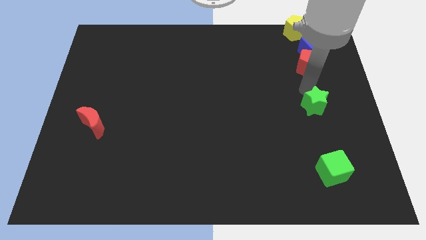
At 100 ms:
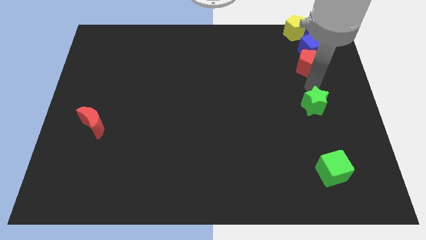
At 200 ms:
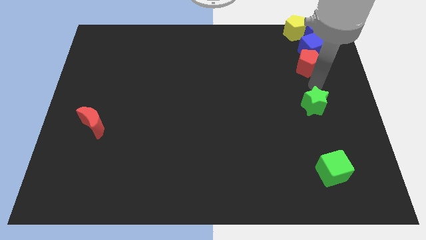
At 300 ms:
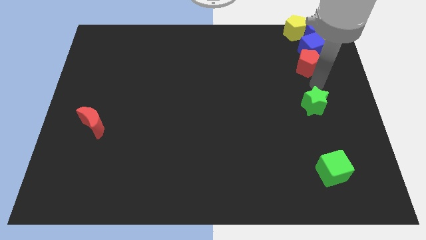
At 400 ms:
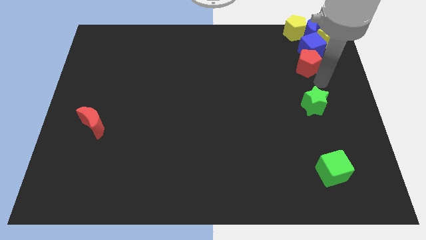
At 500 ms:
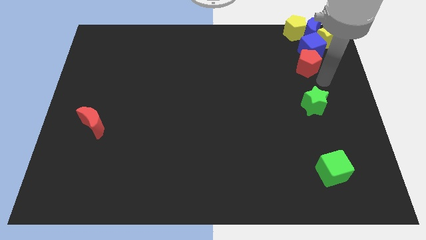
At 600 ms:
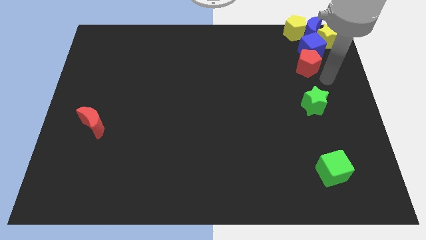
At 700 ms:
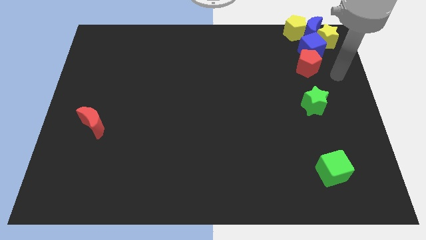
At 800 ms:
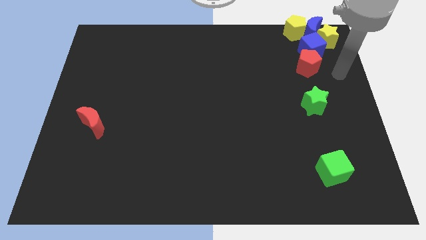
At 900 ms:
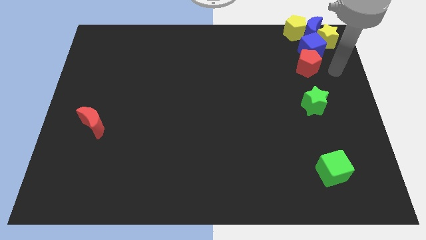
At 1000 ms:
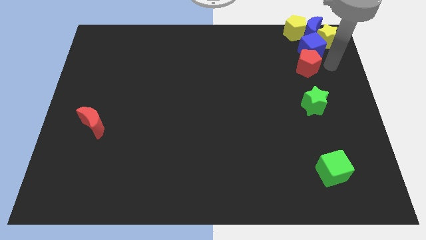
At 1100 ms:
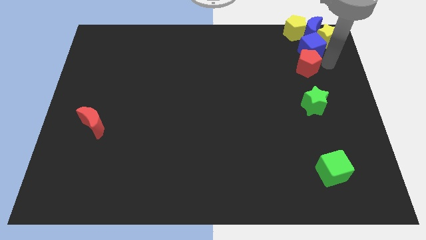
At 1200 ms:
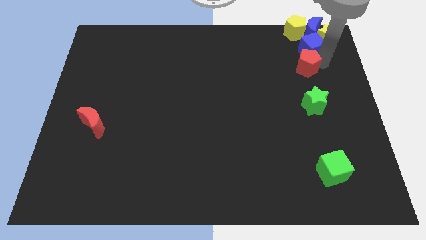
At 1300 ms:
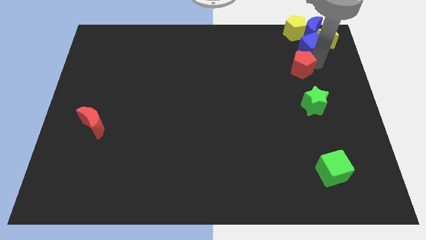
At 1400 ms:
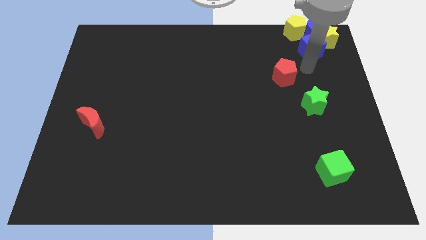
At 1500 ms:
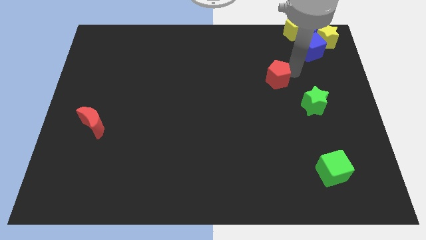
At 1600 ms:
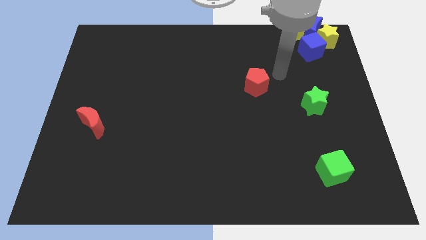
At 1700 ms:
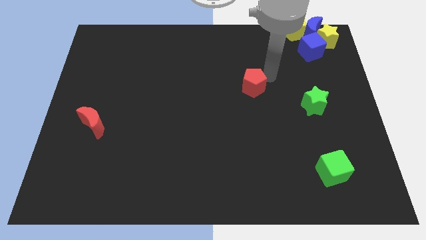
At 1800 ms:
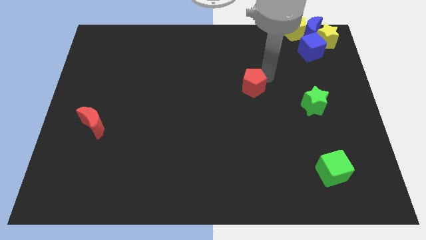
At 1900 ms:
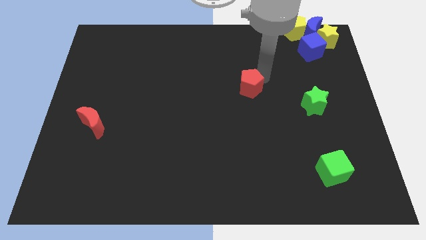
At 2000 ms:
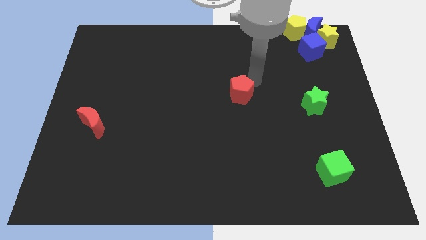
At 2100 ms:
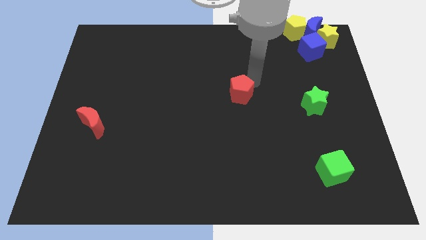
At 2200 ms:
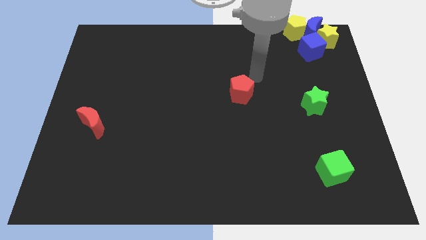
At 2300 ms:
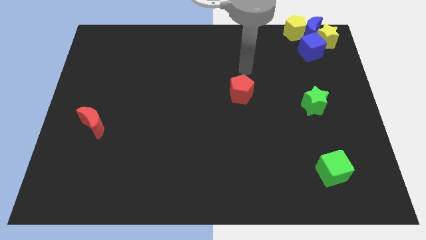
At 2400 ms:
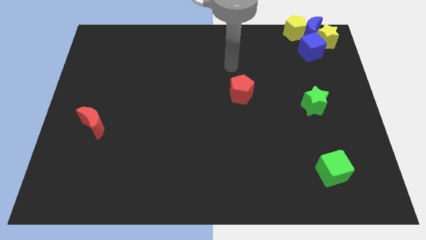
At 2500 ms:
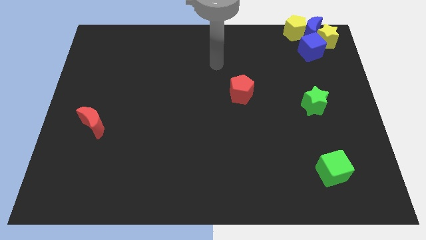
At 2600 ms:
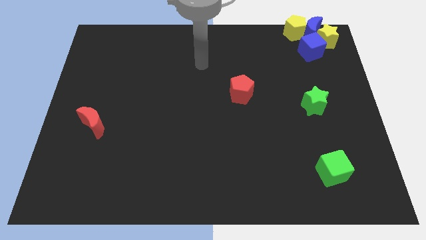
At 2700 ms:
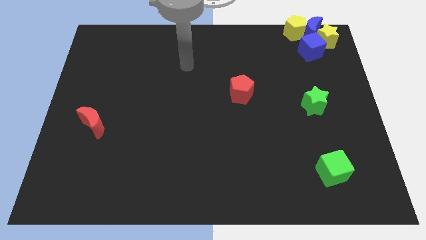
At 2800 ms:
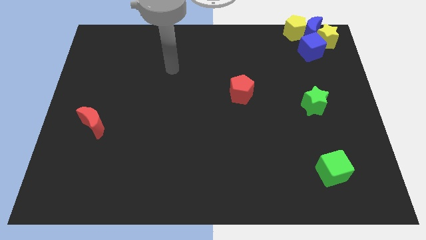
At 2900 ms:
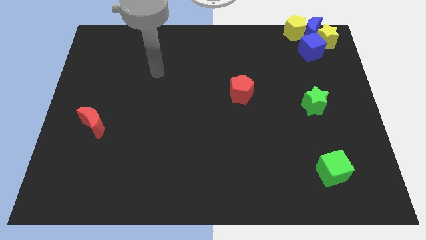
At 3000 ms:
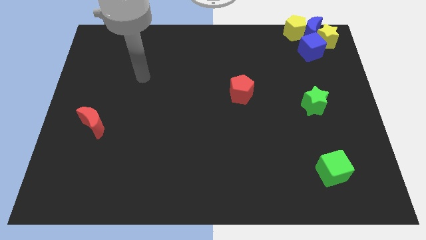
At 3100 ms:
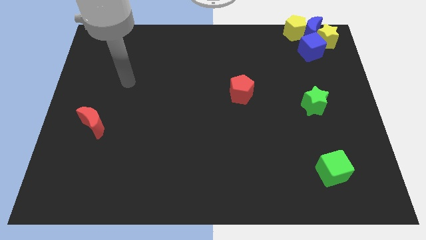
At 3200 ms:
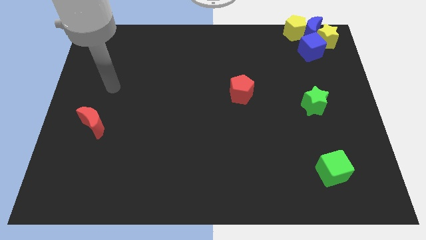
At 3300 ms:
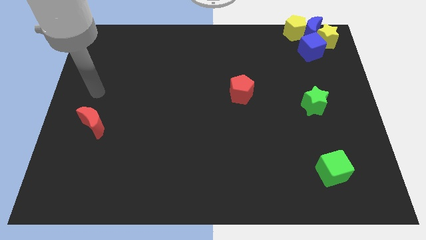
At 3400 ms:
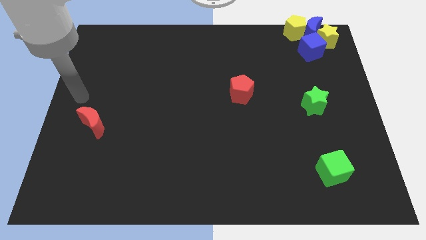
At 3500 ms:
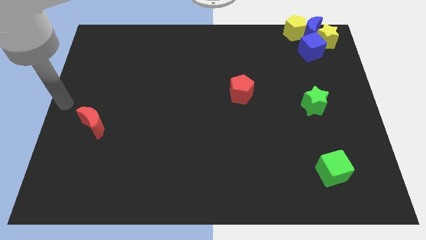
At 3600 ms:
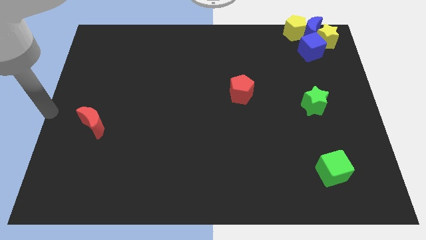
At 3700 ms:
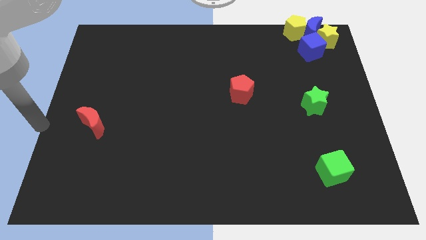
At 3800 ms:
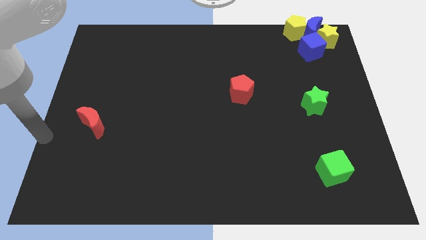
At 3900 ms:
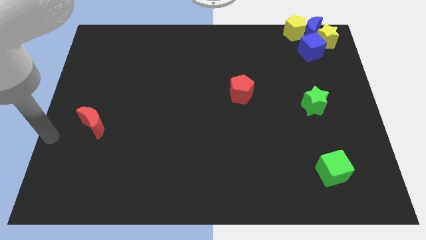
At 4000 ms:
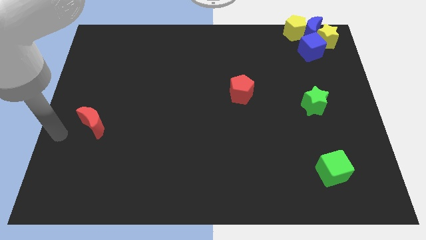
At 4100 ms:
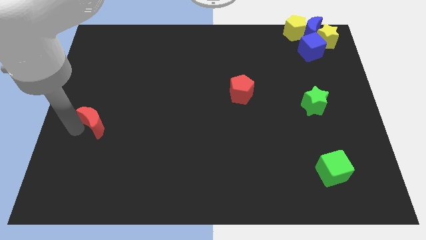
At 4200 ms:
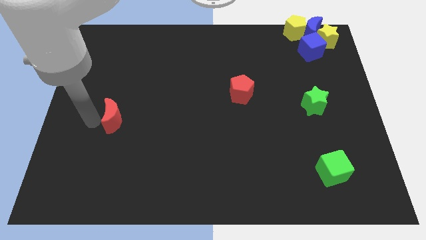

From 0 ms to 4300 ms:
move the red pentagon diagonal to the green cube

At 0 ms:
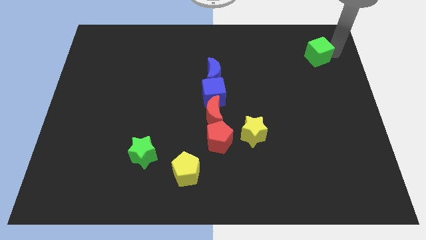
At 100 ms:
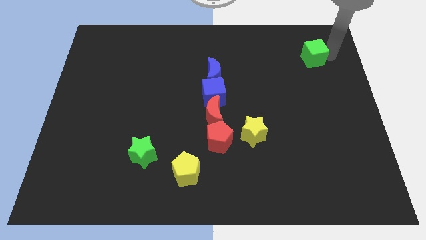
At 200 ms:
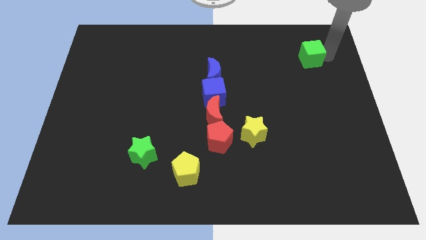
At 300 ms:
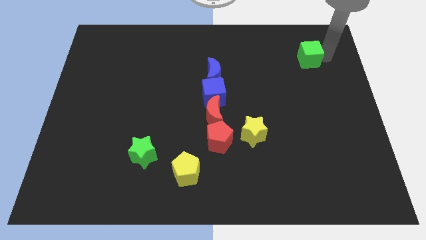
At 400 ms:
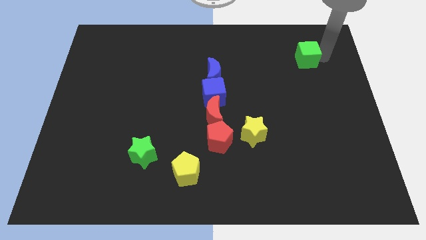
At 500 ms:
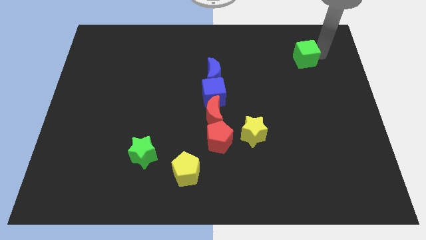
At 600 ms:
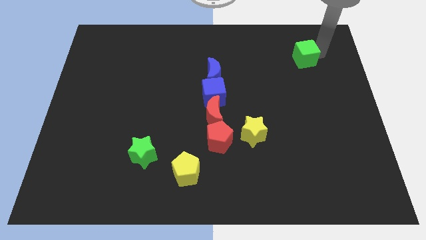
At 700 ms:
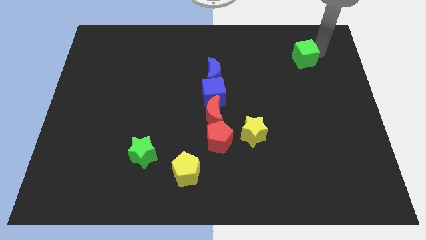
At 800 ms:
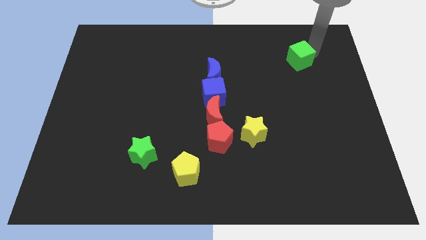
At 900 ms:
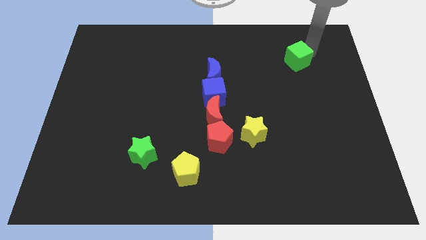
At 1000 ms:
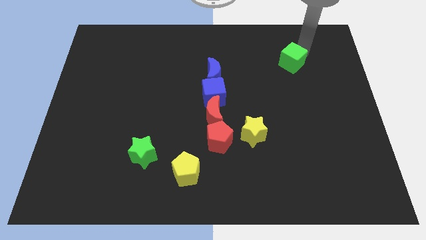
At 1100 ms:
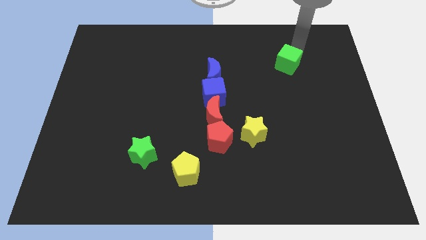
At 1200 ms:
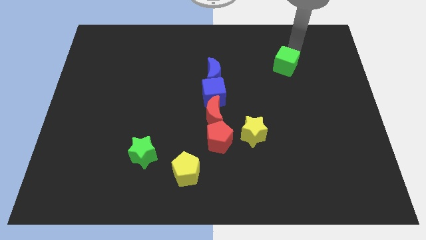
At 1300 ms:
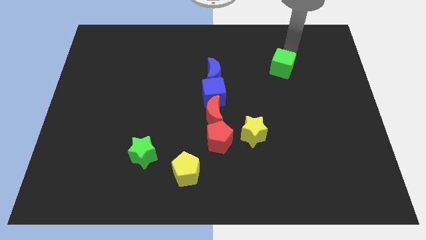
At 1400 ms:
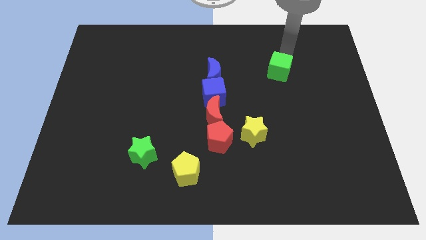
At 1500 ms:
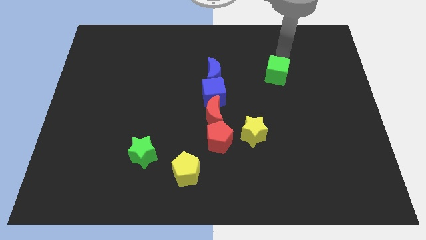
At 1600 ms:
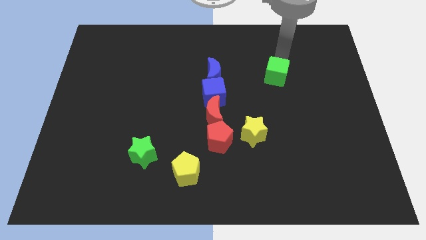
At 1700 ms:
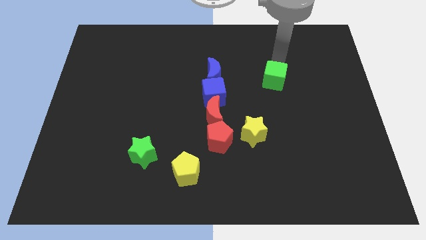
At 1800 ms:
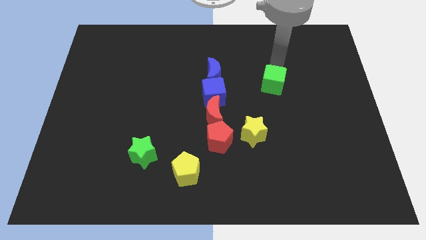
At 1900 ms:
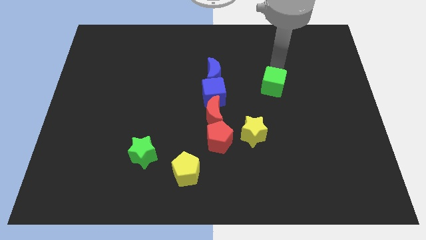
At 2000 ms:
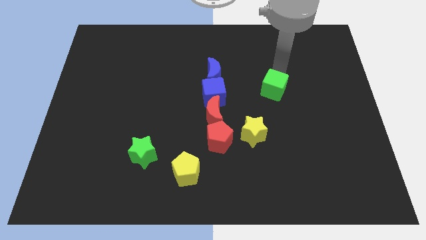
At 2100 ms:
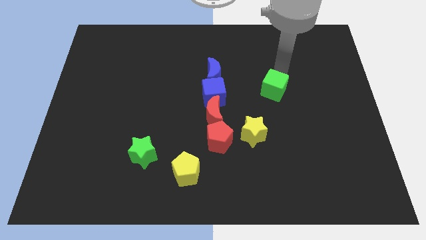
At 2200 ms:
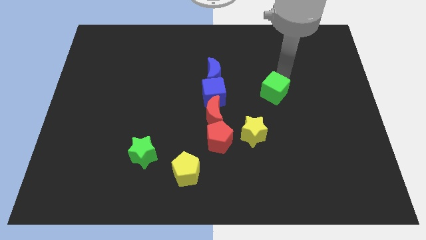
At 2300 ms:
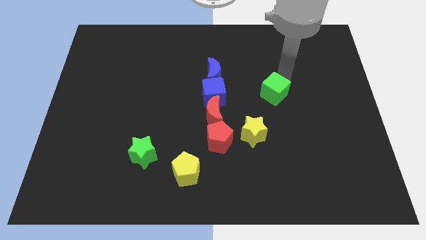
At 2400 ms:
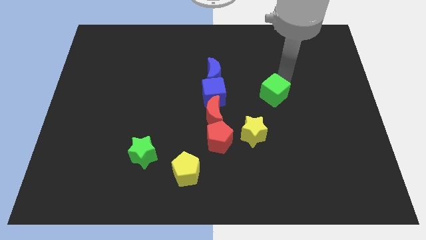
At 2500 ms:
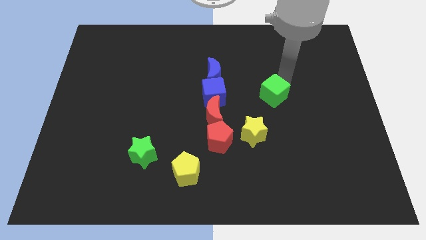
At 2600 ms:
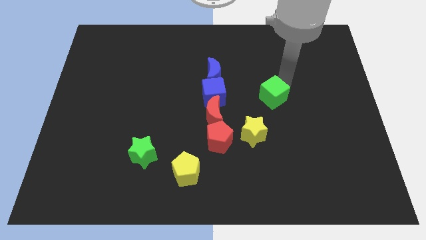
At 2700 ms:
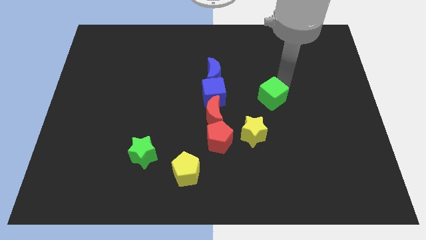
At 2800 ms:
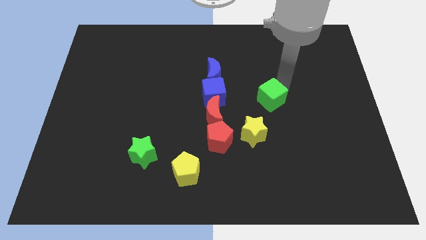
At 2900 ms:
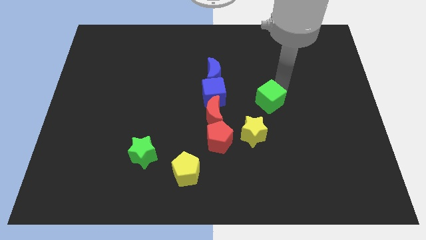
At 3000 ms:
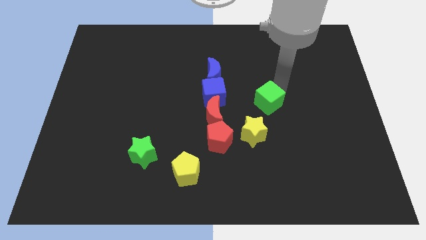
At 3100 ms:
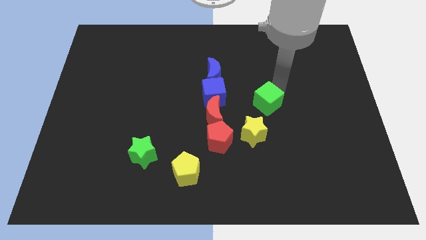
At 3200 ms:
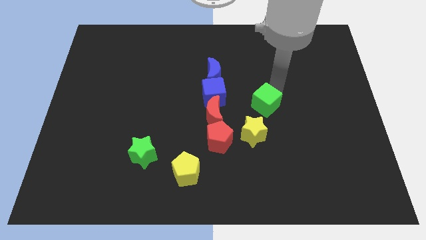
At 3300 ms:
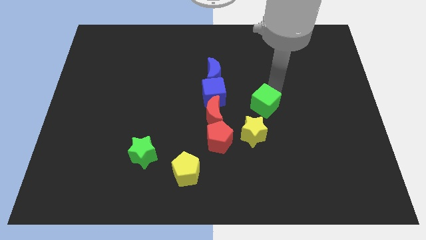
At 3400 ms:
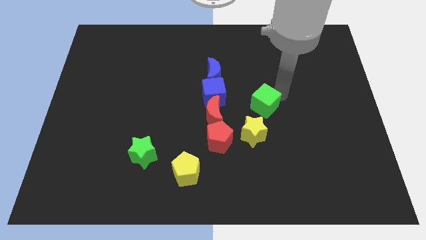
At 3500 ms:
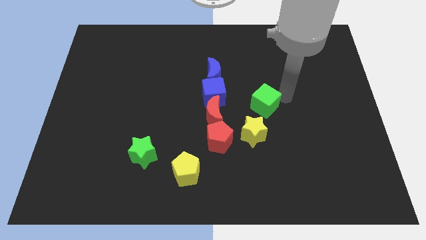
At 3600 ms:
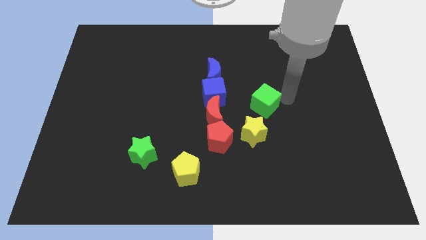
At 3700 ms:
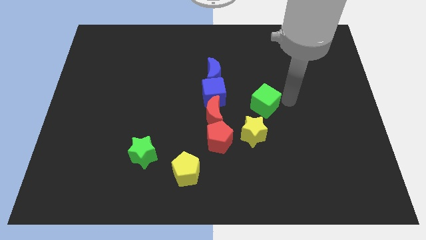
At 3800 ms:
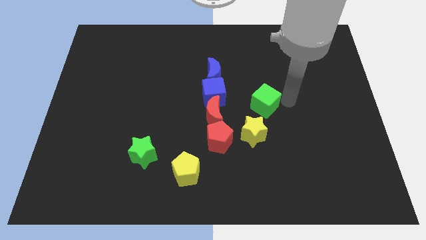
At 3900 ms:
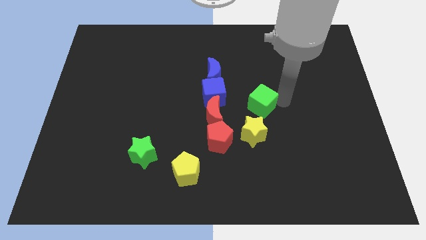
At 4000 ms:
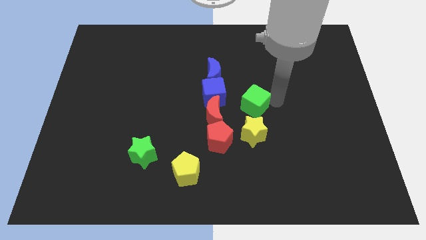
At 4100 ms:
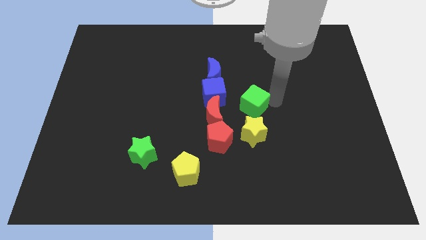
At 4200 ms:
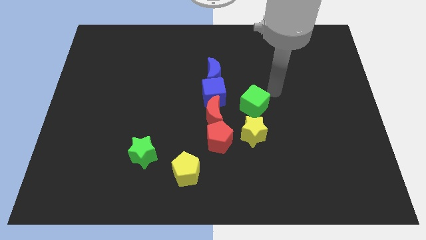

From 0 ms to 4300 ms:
place green cube above yellow star

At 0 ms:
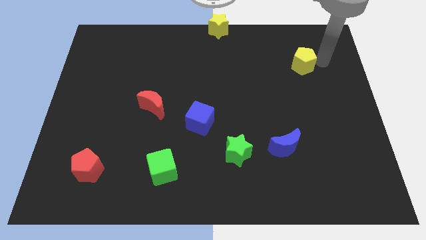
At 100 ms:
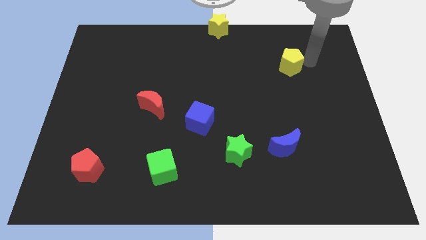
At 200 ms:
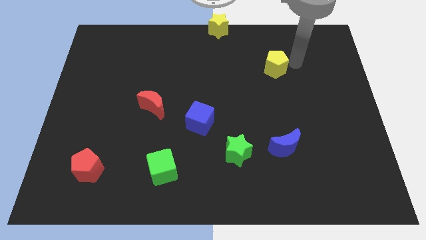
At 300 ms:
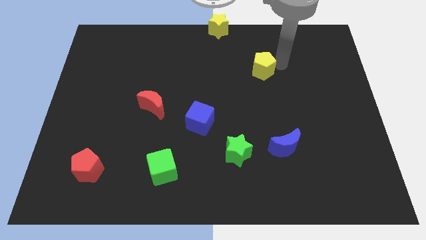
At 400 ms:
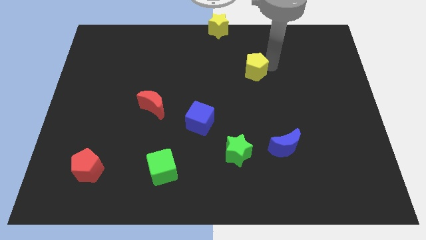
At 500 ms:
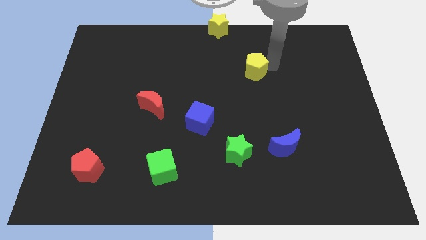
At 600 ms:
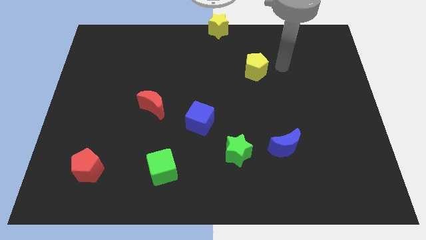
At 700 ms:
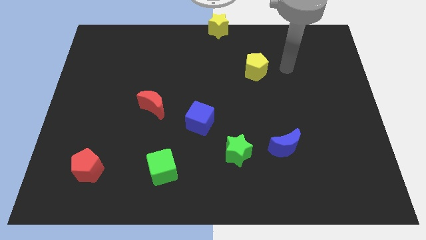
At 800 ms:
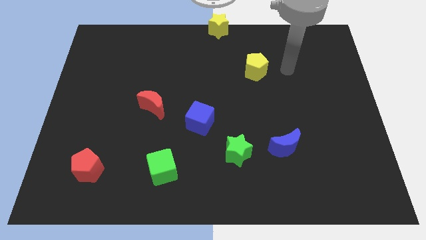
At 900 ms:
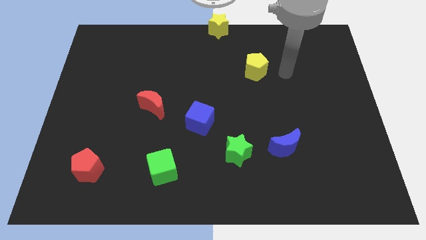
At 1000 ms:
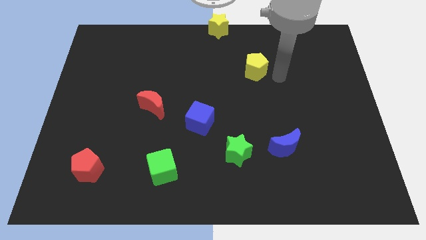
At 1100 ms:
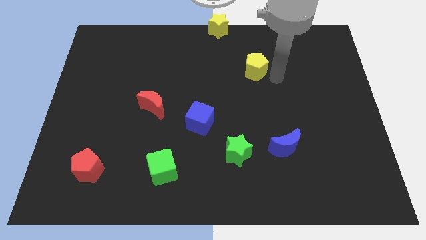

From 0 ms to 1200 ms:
put the yellow pentagon diagonally top left to the blue moon
